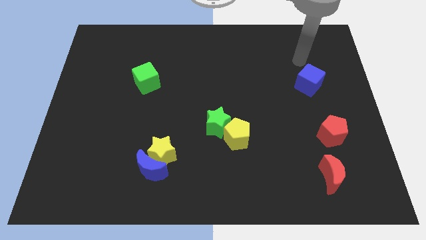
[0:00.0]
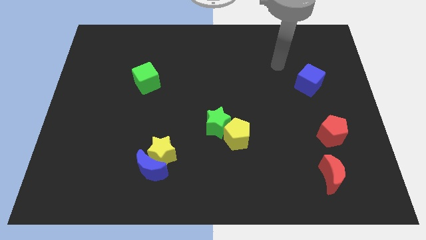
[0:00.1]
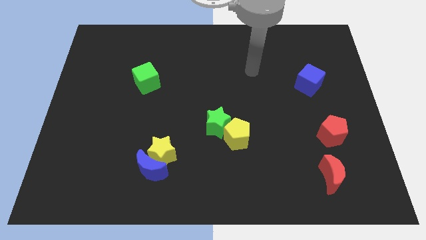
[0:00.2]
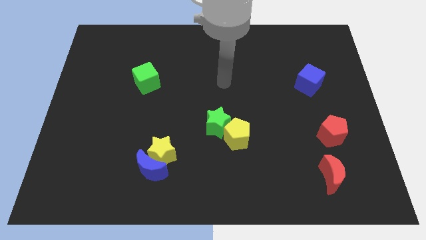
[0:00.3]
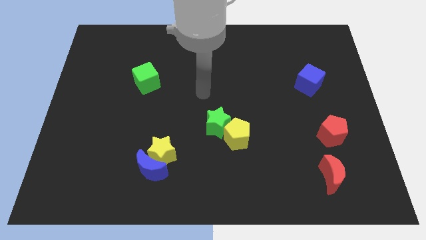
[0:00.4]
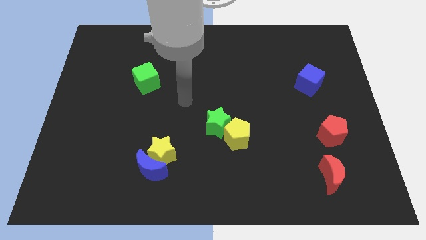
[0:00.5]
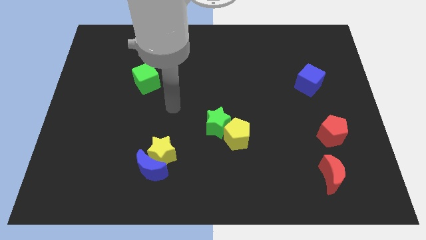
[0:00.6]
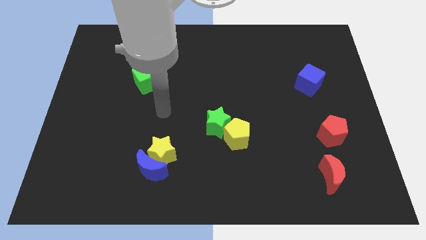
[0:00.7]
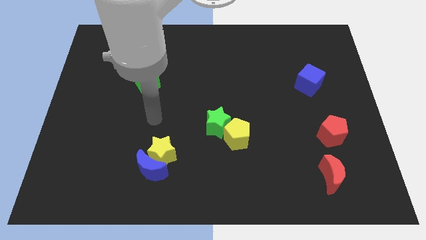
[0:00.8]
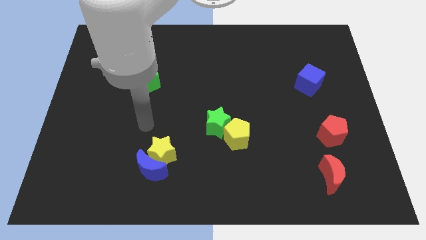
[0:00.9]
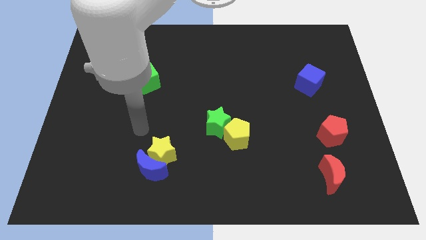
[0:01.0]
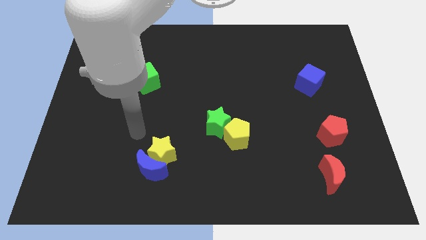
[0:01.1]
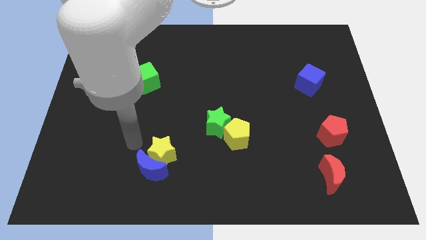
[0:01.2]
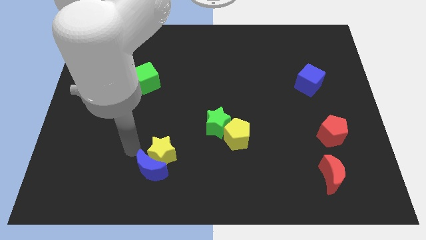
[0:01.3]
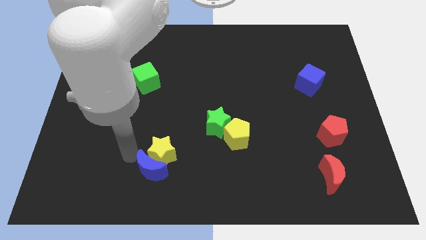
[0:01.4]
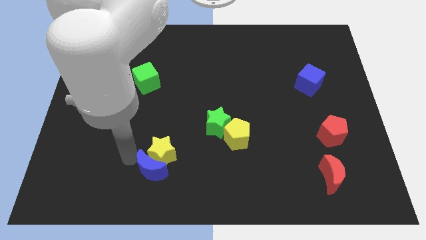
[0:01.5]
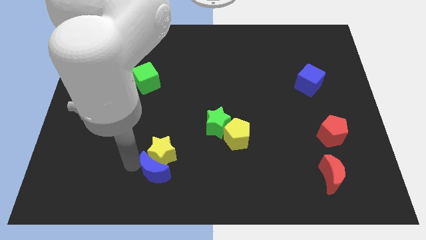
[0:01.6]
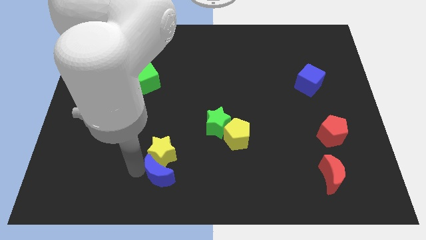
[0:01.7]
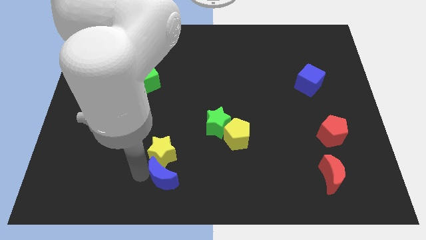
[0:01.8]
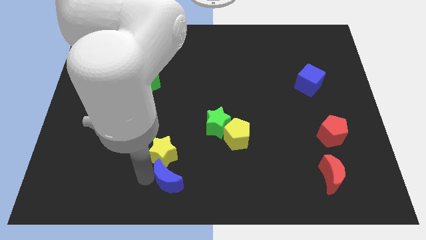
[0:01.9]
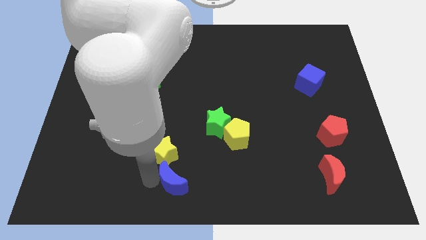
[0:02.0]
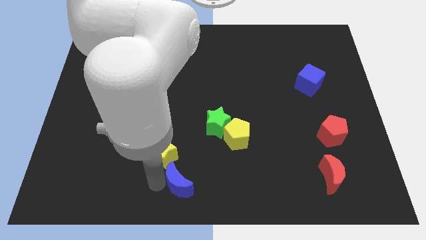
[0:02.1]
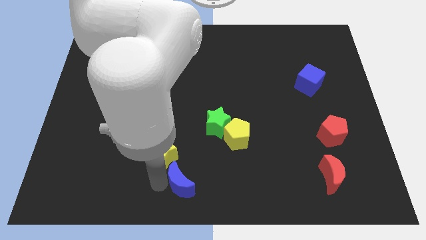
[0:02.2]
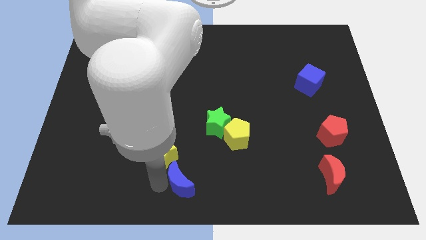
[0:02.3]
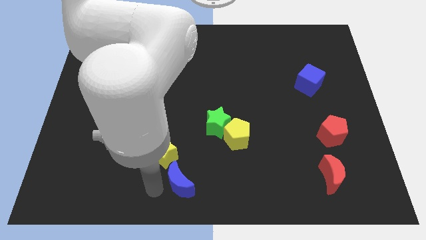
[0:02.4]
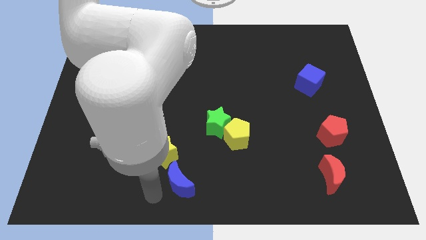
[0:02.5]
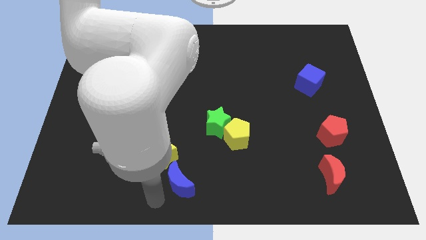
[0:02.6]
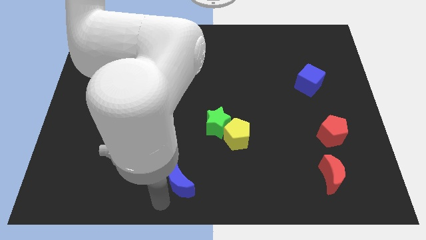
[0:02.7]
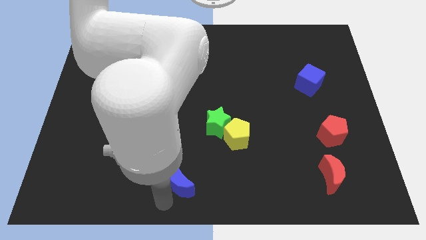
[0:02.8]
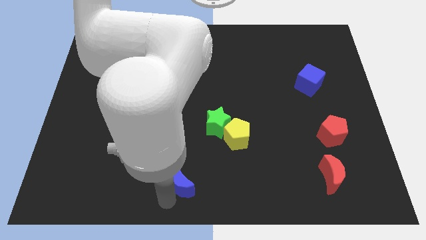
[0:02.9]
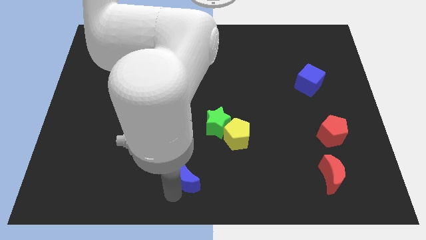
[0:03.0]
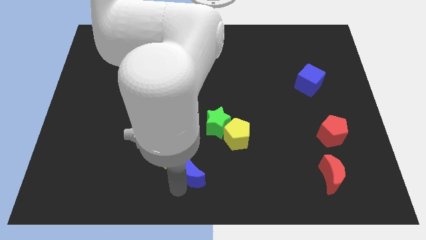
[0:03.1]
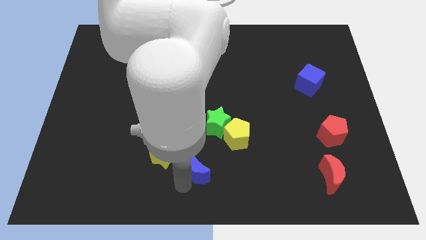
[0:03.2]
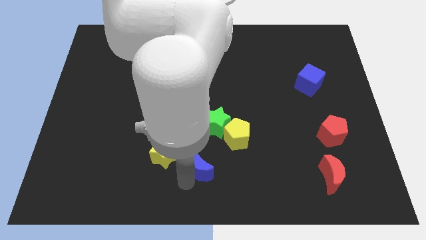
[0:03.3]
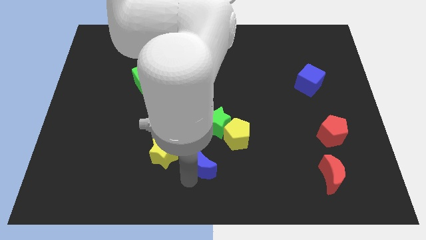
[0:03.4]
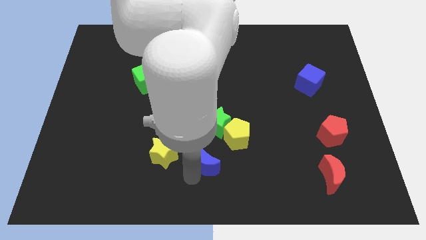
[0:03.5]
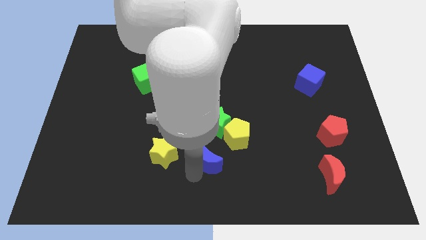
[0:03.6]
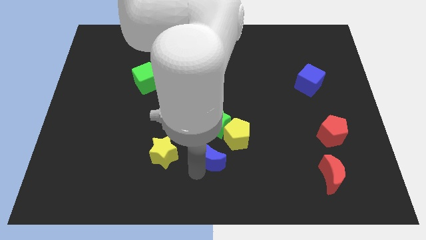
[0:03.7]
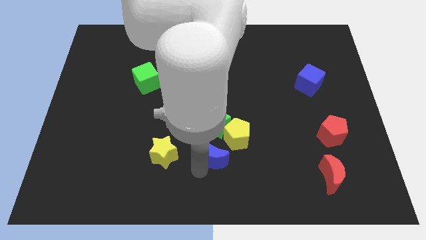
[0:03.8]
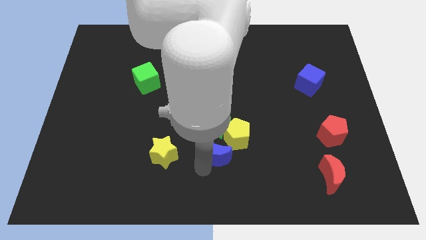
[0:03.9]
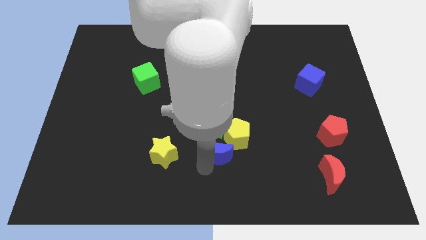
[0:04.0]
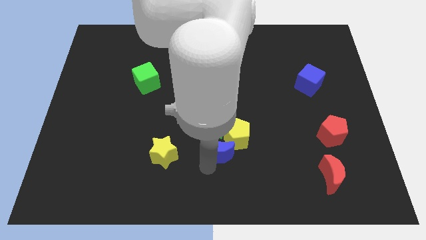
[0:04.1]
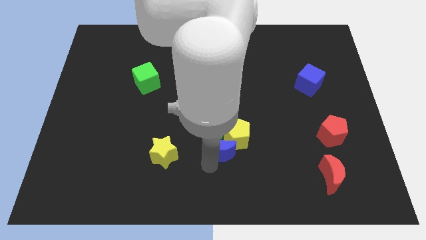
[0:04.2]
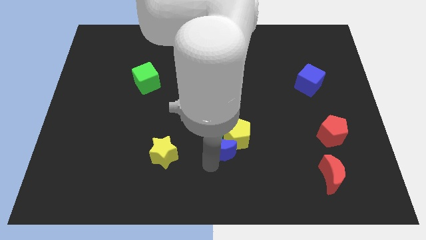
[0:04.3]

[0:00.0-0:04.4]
move the blue moon towards the yellow pentagon

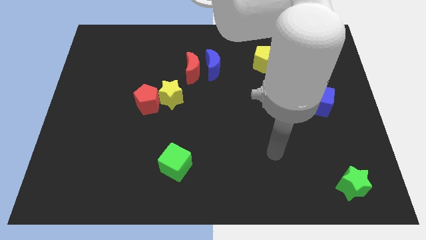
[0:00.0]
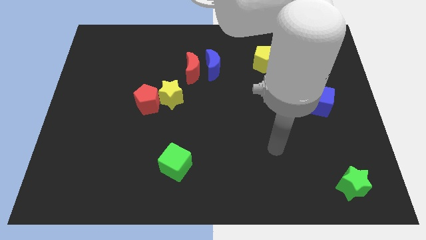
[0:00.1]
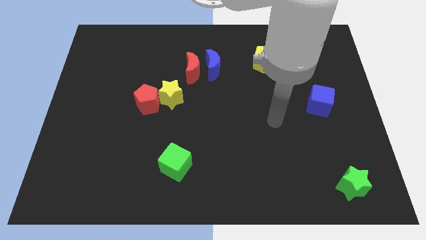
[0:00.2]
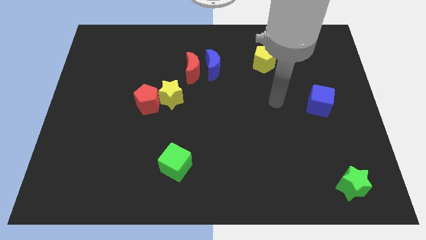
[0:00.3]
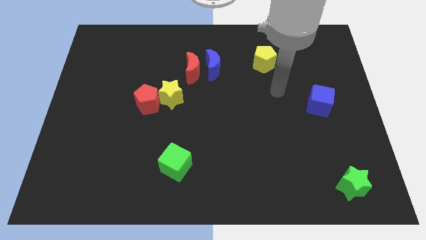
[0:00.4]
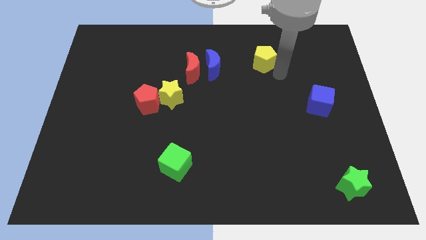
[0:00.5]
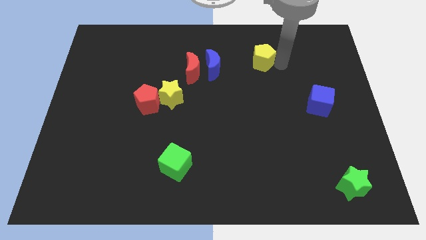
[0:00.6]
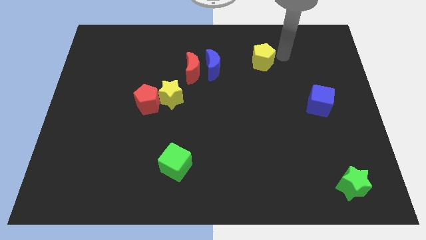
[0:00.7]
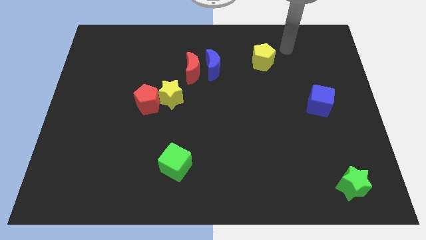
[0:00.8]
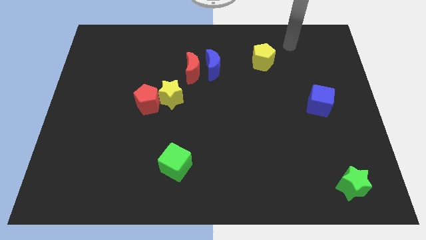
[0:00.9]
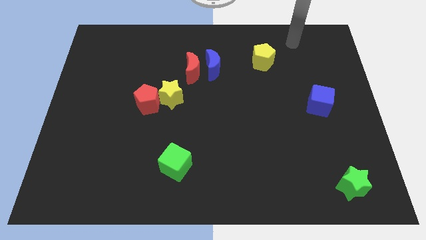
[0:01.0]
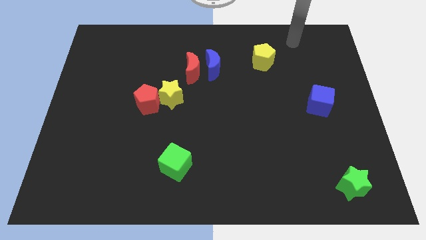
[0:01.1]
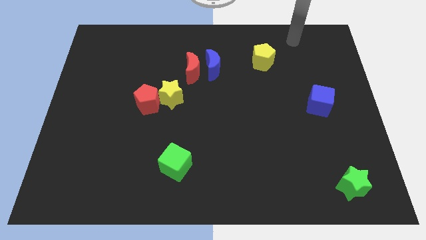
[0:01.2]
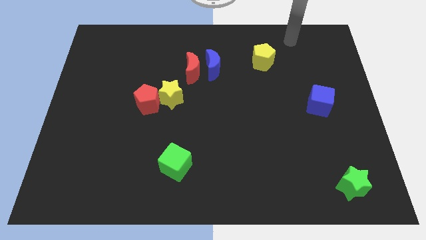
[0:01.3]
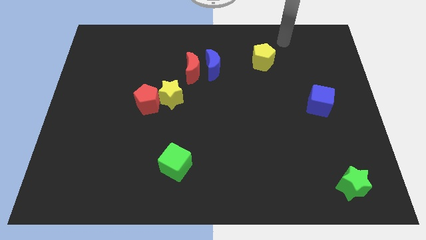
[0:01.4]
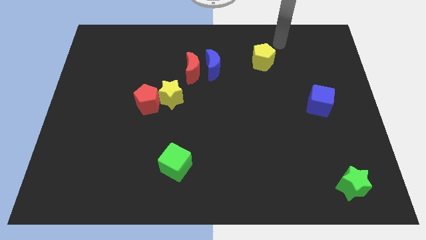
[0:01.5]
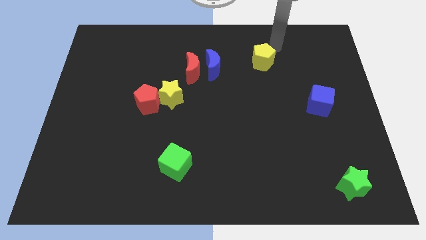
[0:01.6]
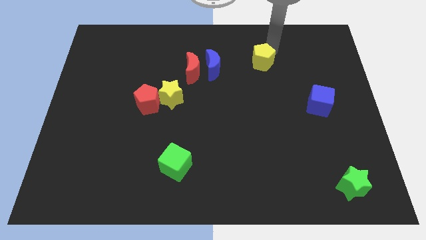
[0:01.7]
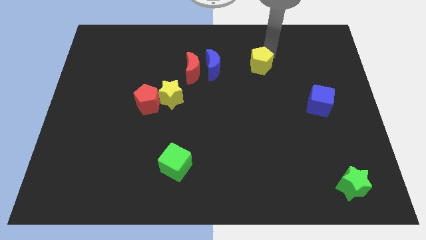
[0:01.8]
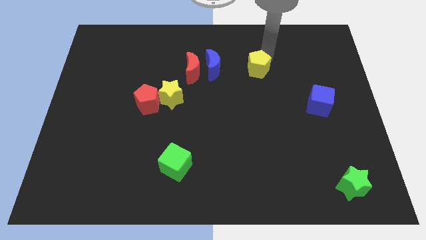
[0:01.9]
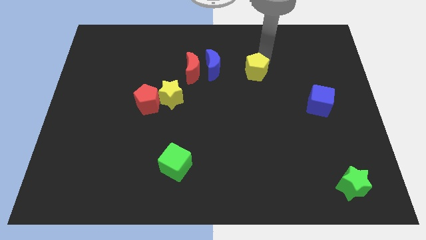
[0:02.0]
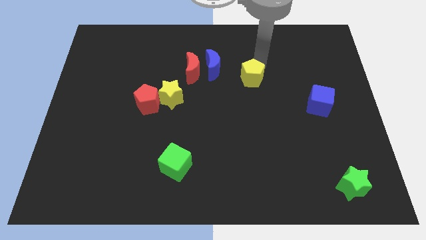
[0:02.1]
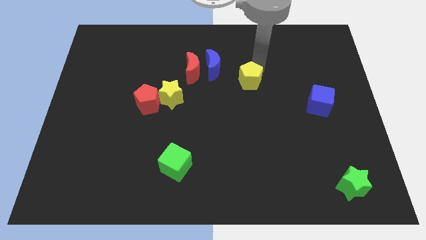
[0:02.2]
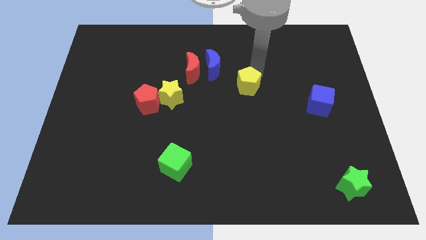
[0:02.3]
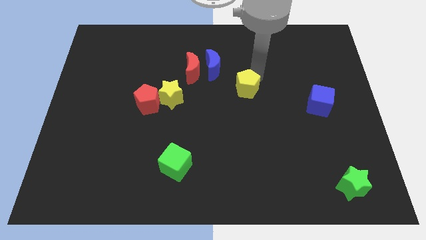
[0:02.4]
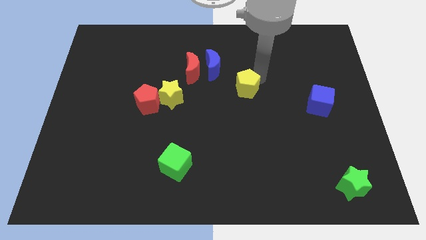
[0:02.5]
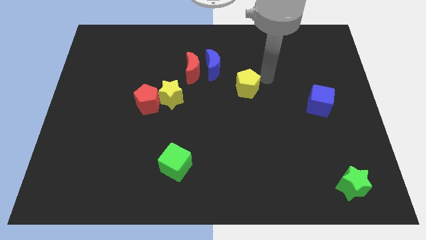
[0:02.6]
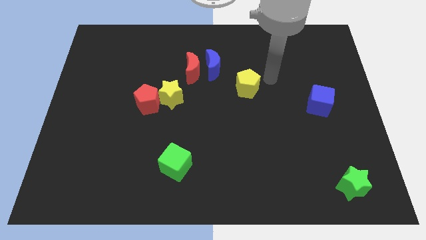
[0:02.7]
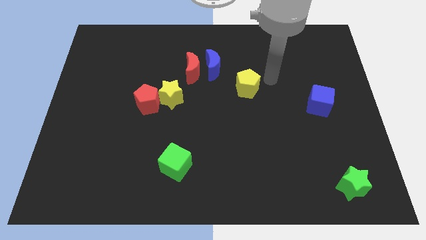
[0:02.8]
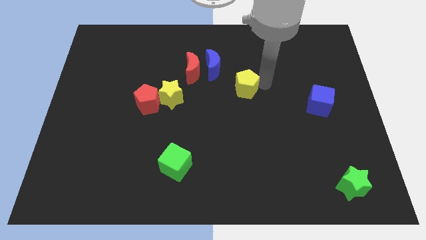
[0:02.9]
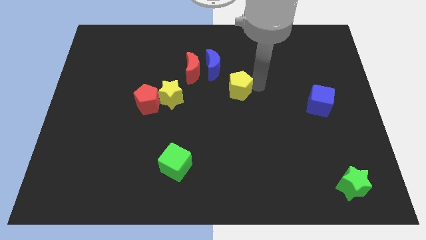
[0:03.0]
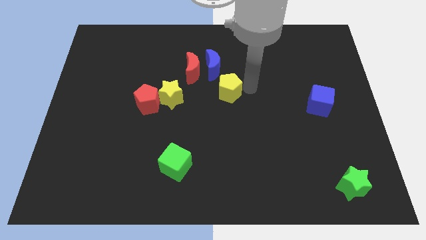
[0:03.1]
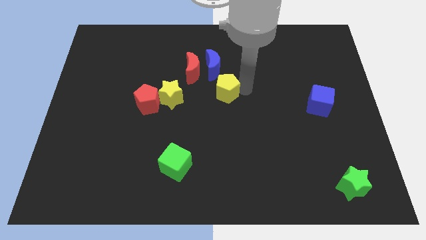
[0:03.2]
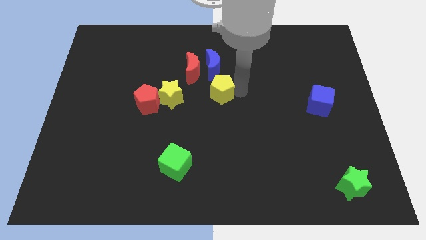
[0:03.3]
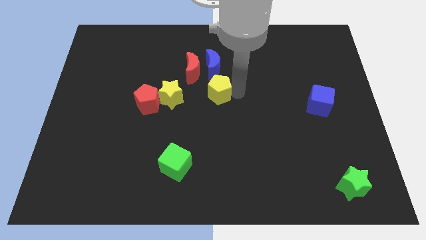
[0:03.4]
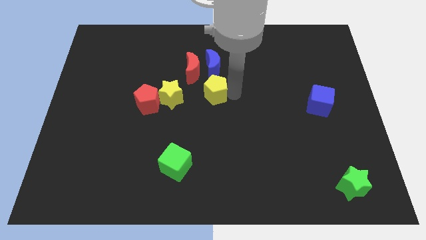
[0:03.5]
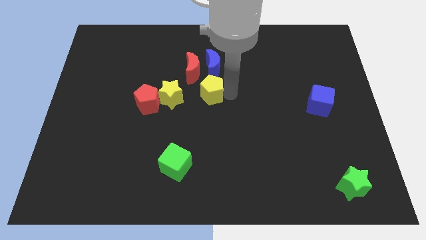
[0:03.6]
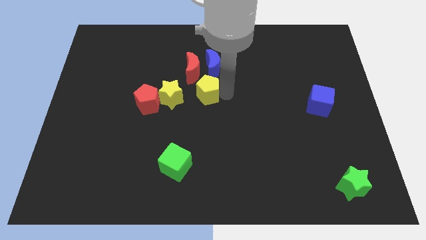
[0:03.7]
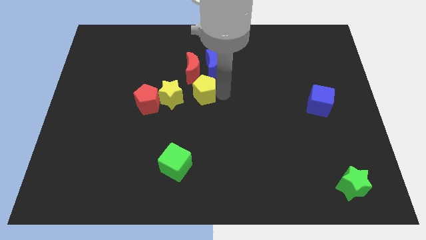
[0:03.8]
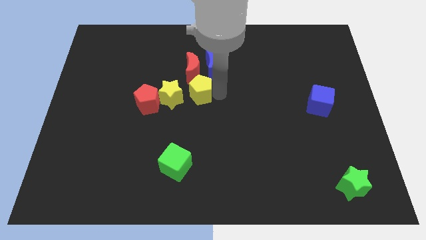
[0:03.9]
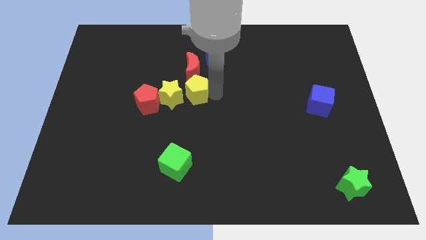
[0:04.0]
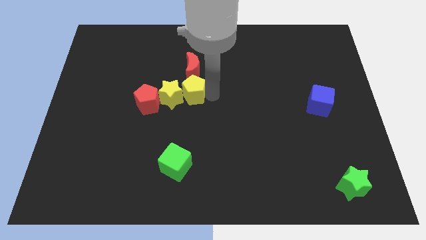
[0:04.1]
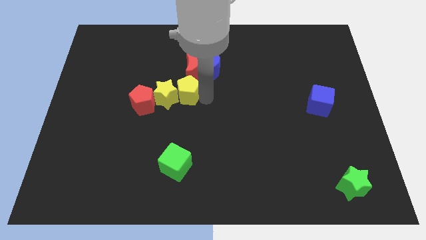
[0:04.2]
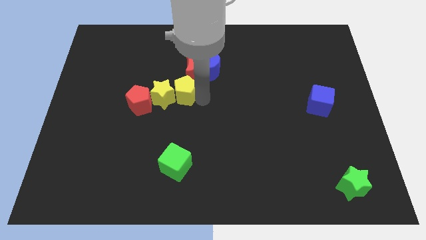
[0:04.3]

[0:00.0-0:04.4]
move the yellow pentagon close to the yellow star
